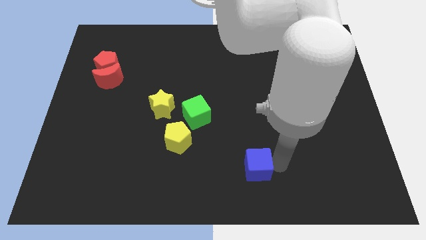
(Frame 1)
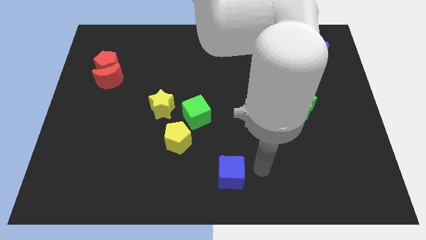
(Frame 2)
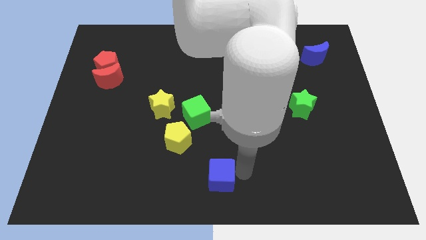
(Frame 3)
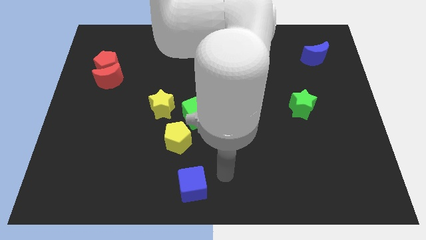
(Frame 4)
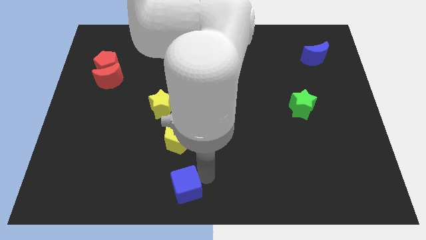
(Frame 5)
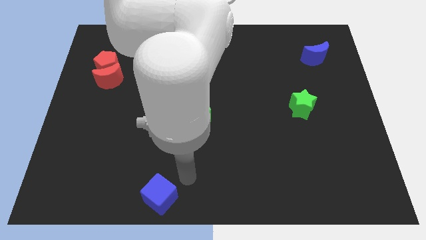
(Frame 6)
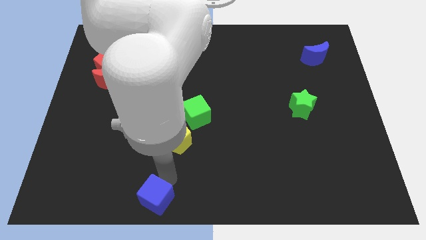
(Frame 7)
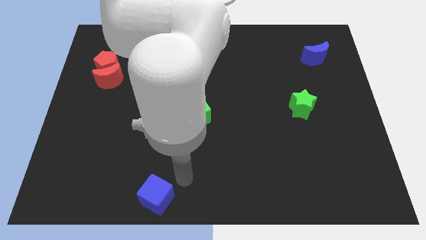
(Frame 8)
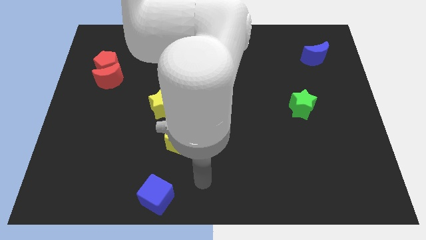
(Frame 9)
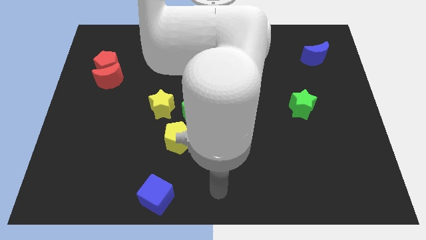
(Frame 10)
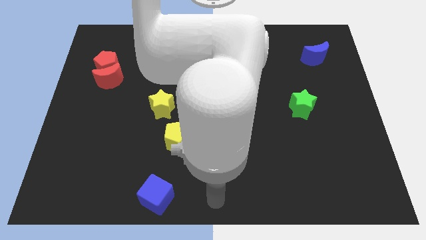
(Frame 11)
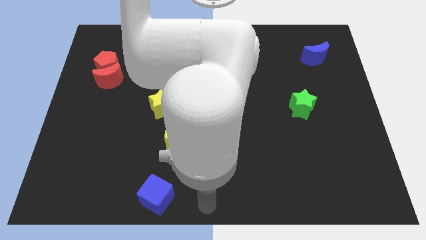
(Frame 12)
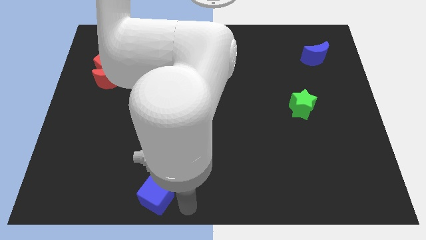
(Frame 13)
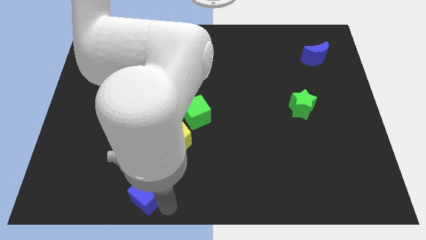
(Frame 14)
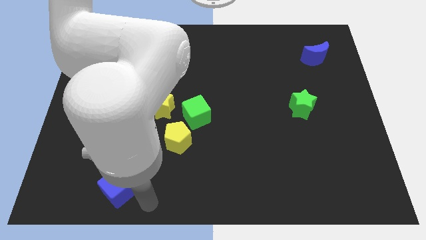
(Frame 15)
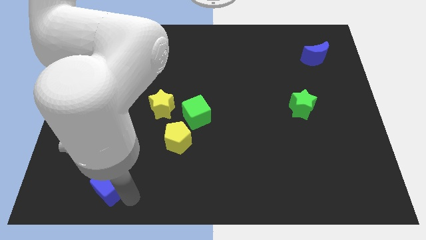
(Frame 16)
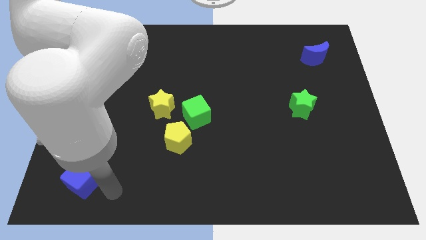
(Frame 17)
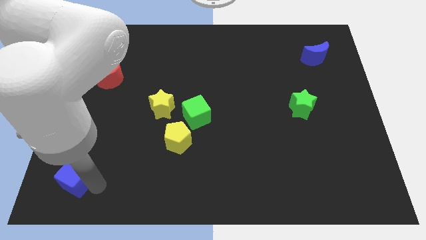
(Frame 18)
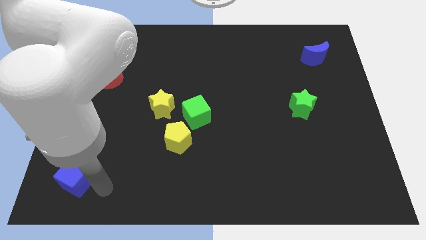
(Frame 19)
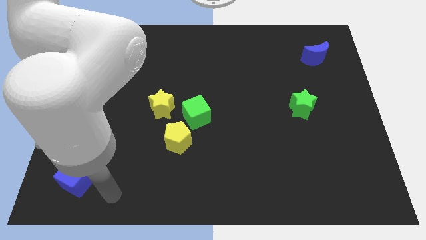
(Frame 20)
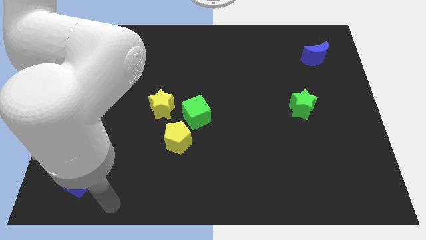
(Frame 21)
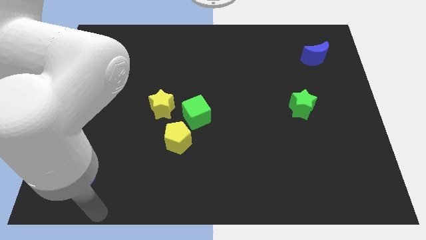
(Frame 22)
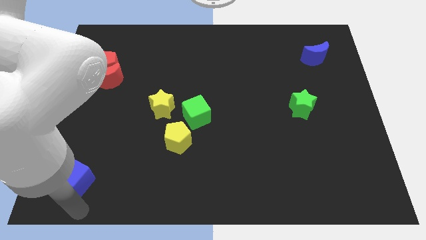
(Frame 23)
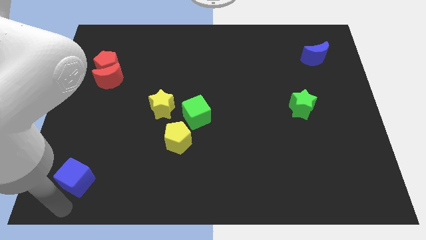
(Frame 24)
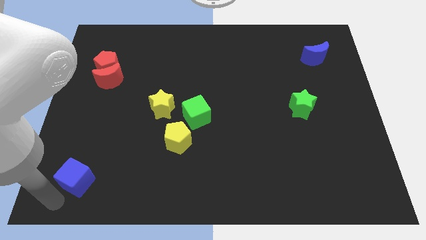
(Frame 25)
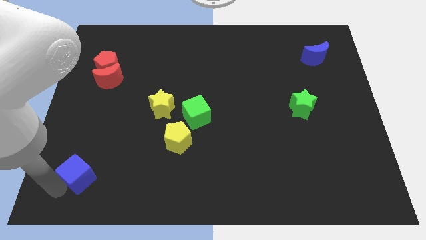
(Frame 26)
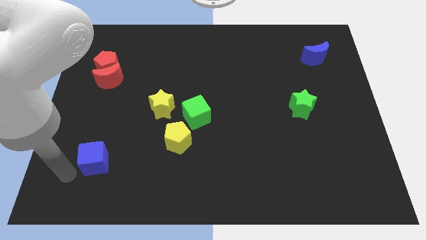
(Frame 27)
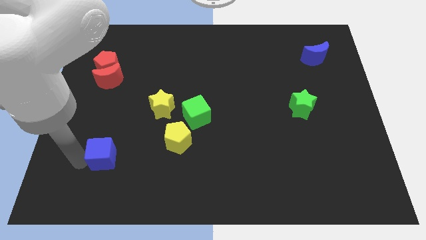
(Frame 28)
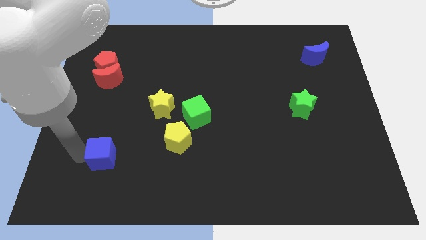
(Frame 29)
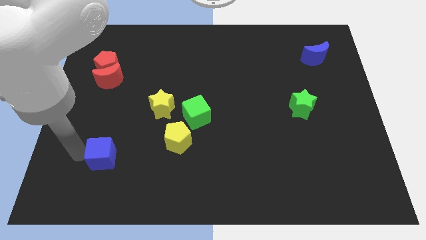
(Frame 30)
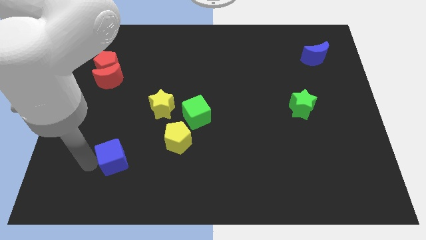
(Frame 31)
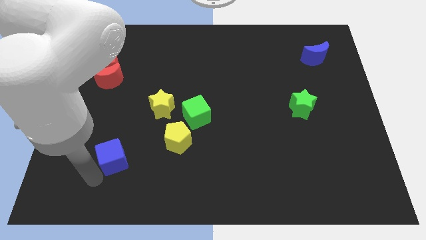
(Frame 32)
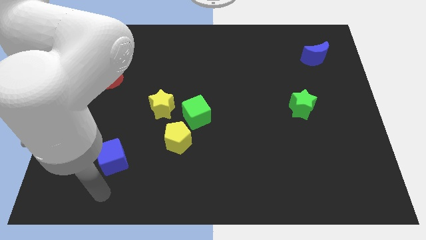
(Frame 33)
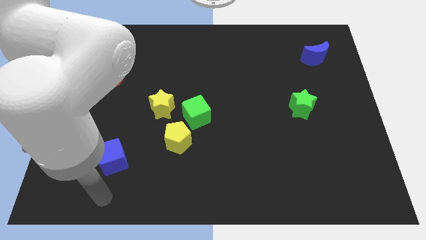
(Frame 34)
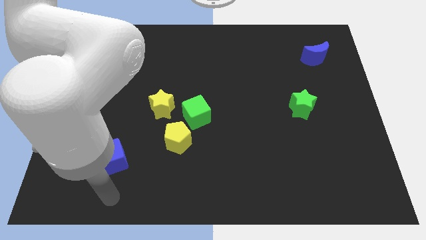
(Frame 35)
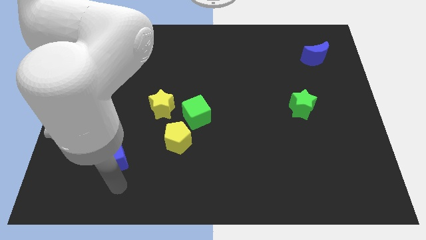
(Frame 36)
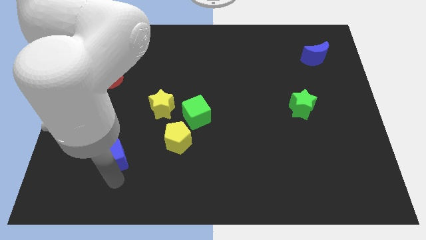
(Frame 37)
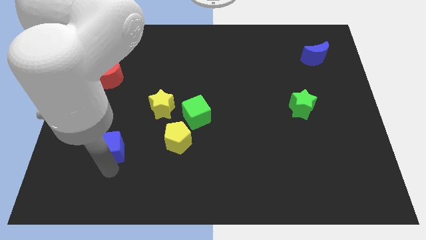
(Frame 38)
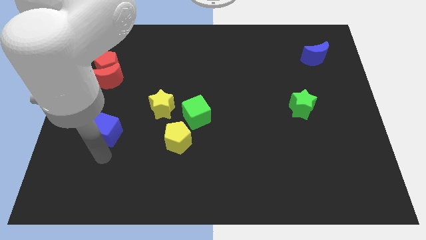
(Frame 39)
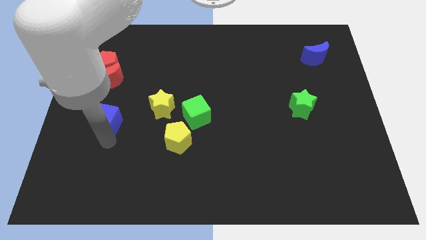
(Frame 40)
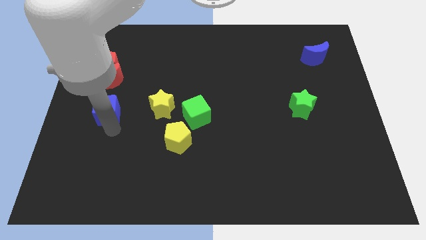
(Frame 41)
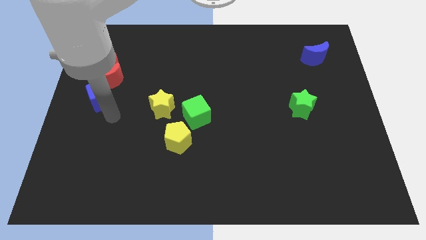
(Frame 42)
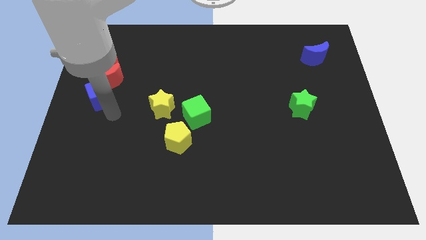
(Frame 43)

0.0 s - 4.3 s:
push the blue cube into the bottom side of the red crescent

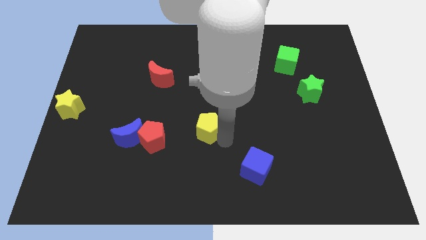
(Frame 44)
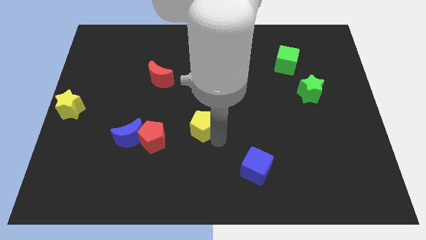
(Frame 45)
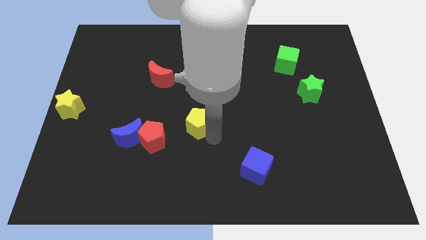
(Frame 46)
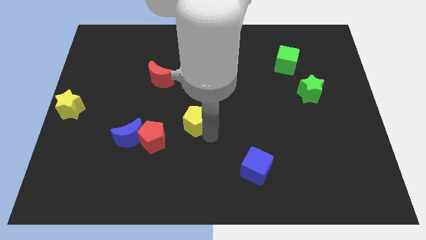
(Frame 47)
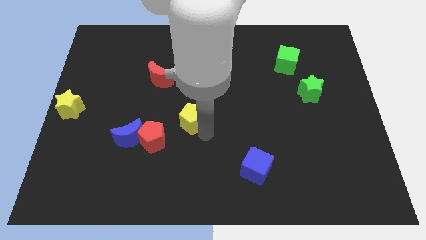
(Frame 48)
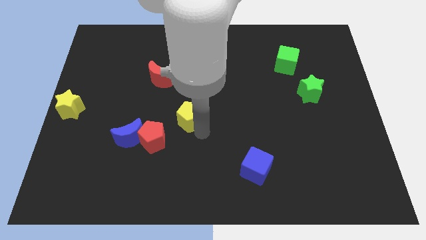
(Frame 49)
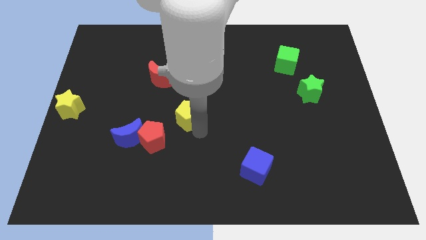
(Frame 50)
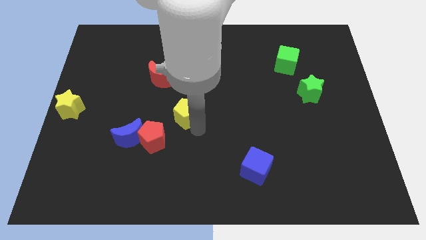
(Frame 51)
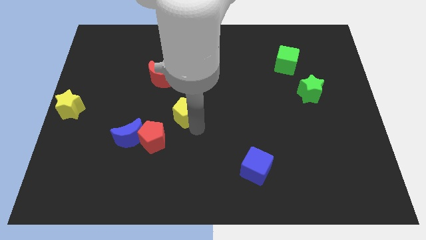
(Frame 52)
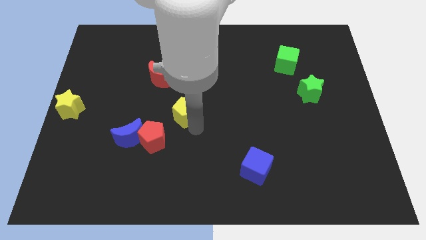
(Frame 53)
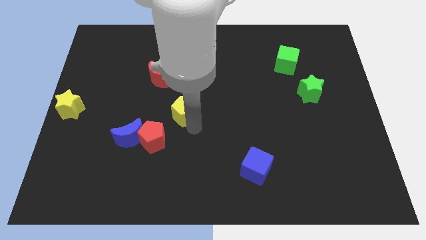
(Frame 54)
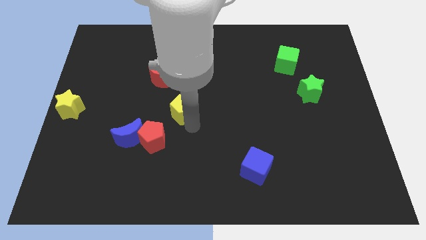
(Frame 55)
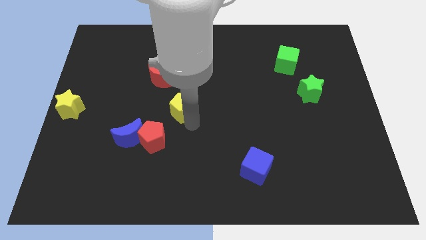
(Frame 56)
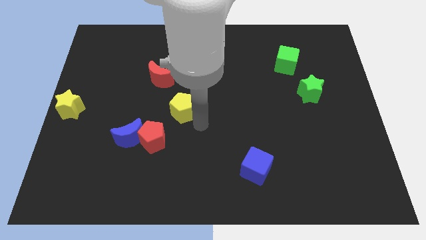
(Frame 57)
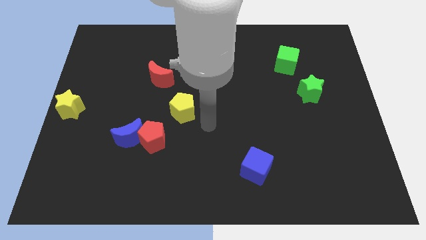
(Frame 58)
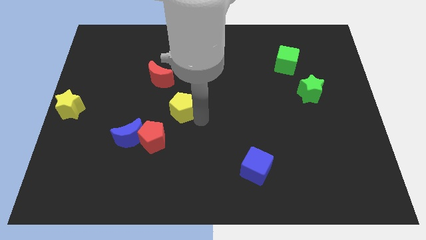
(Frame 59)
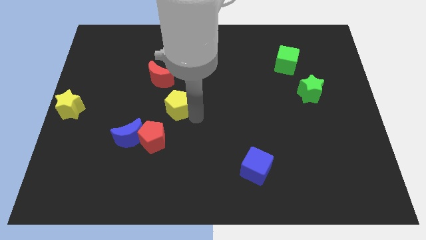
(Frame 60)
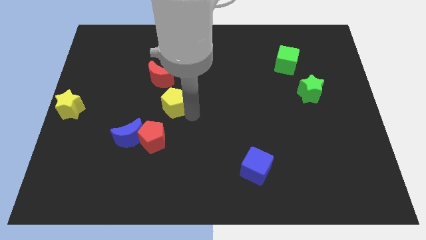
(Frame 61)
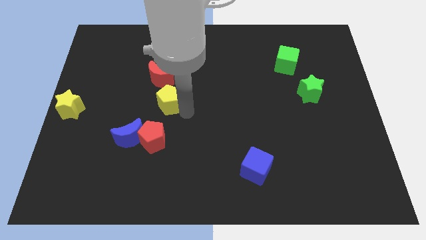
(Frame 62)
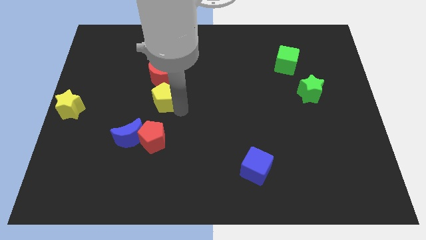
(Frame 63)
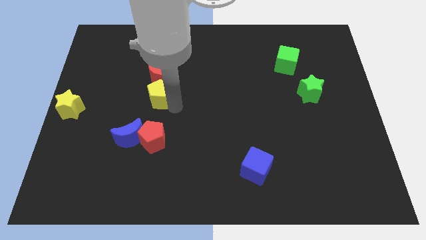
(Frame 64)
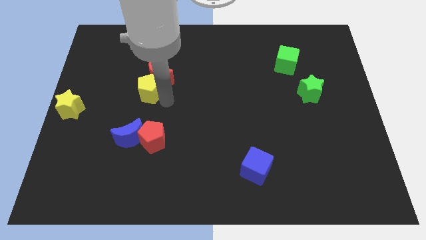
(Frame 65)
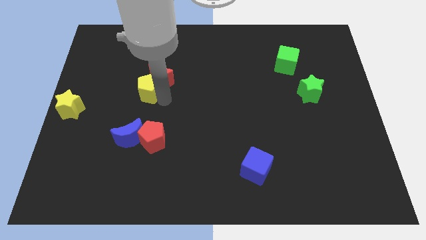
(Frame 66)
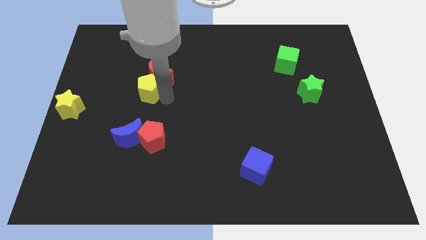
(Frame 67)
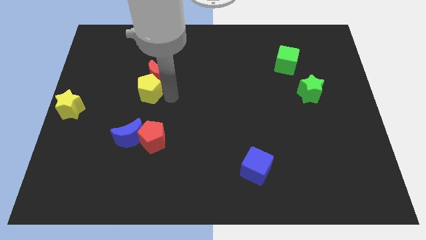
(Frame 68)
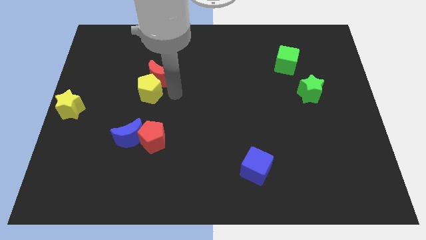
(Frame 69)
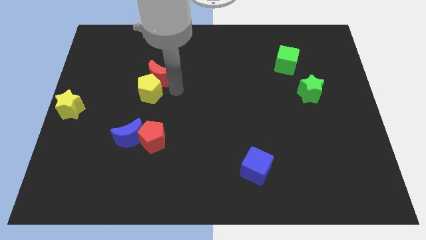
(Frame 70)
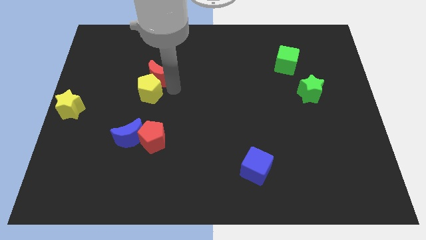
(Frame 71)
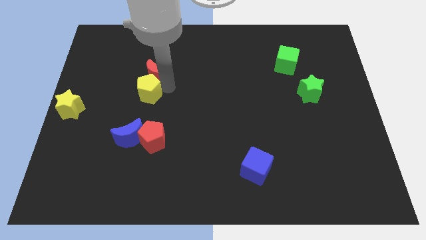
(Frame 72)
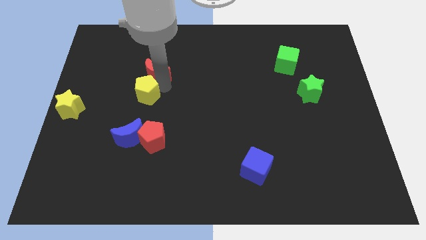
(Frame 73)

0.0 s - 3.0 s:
push the yellow pentagon to the bottom of the red crescent

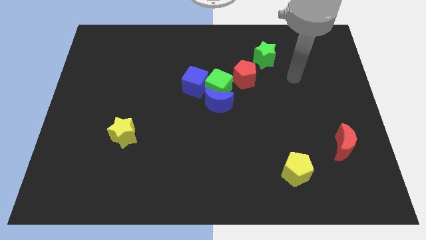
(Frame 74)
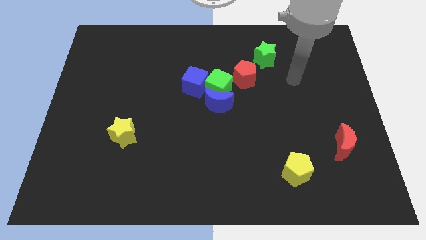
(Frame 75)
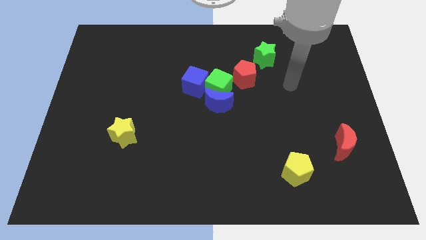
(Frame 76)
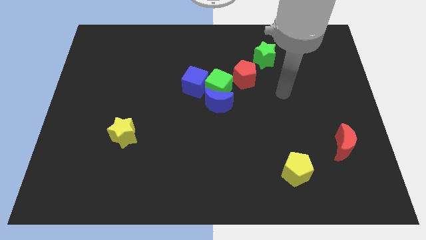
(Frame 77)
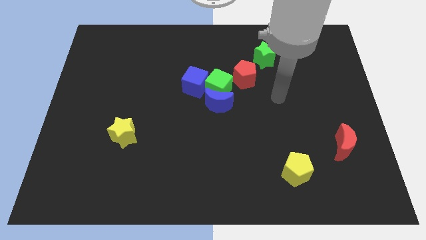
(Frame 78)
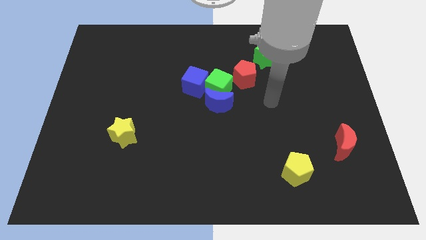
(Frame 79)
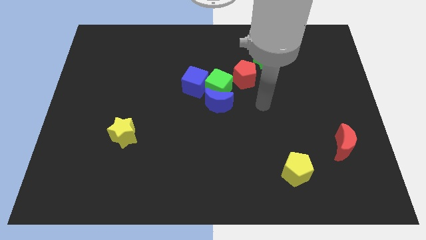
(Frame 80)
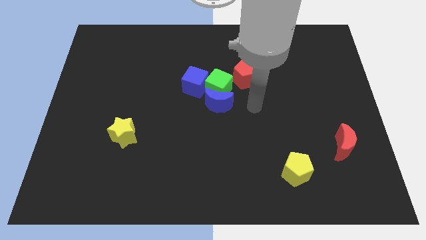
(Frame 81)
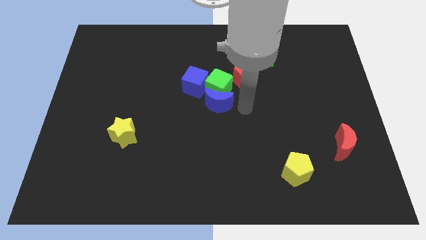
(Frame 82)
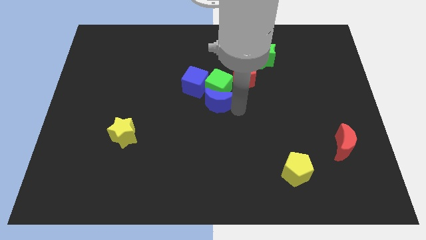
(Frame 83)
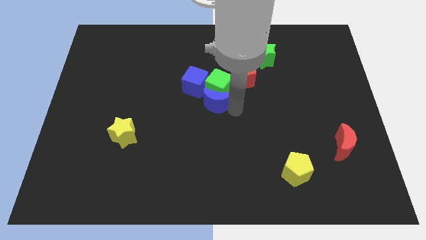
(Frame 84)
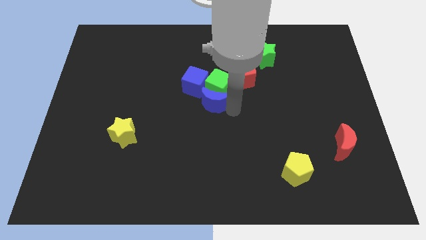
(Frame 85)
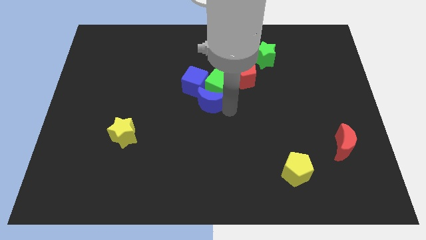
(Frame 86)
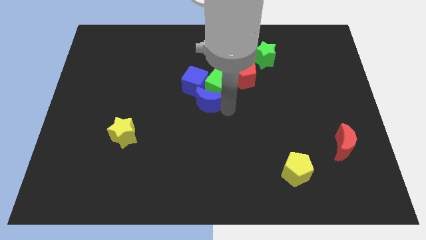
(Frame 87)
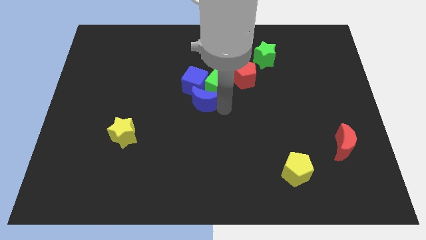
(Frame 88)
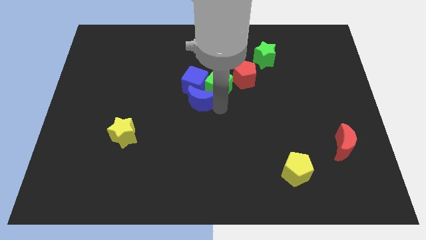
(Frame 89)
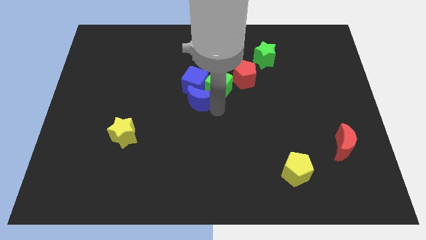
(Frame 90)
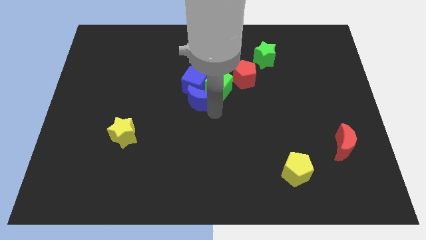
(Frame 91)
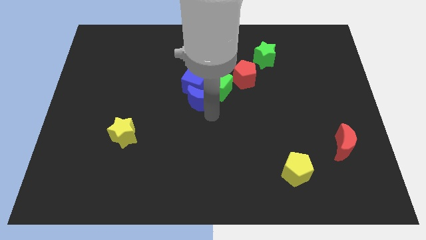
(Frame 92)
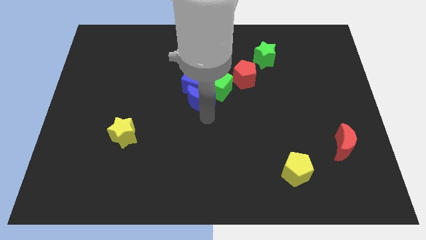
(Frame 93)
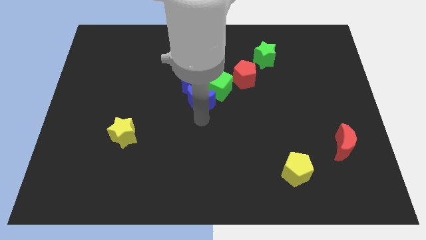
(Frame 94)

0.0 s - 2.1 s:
place the blue crescent to the bottom of green cube
